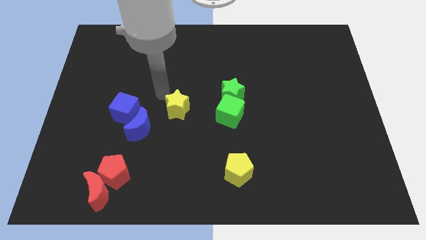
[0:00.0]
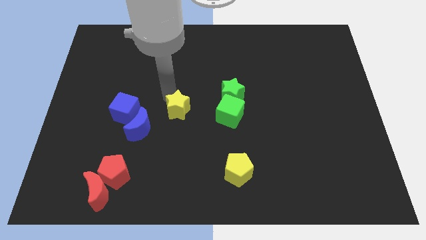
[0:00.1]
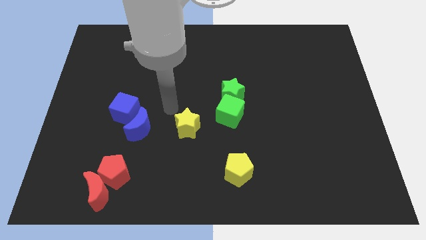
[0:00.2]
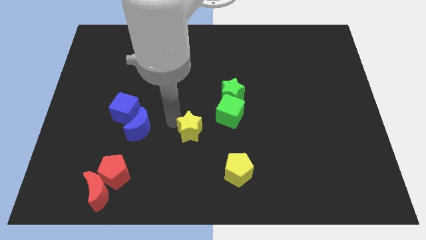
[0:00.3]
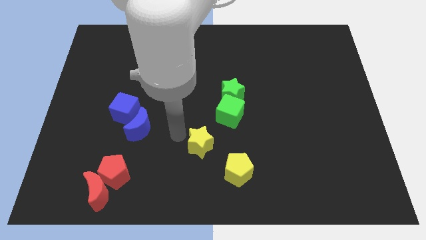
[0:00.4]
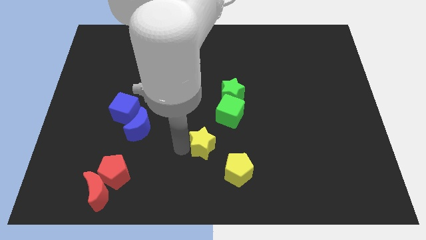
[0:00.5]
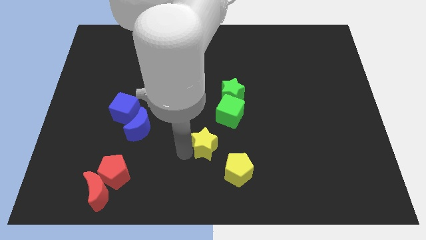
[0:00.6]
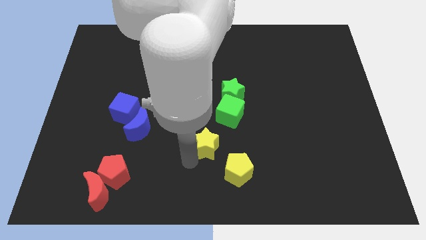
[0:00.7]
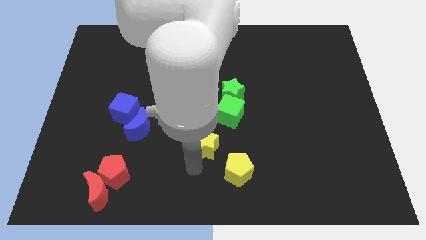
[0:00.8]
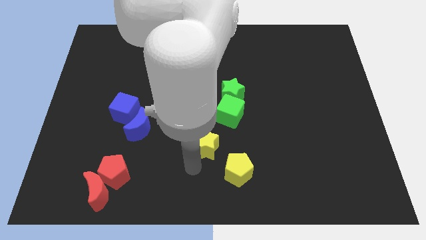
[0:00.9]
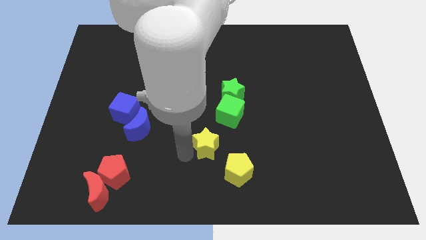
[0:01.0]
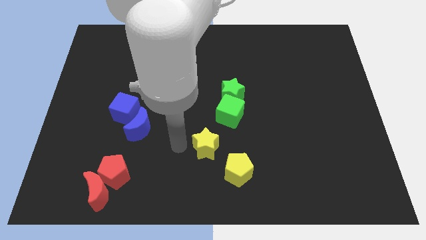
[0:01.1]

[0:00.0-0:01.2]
move the yellow star towards the yellow pentagon

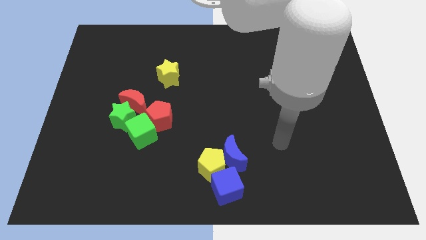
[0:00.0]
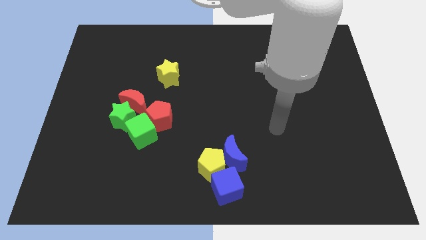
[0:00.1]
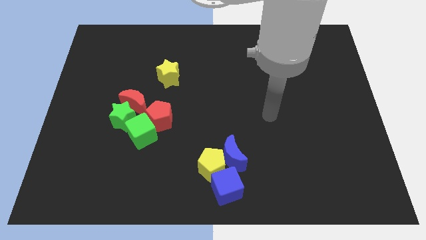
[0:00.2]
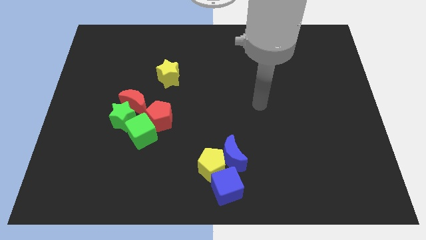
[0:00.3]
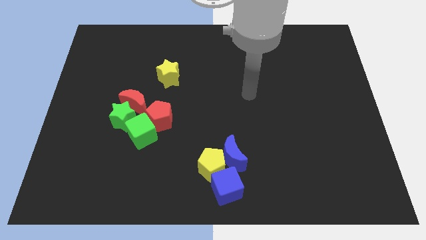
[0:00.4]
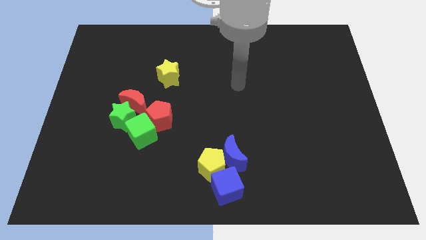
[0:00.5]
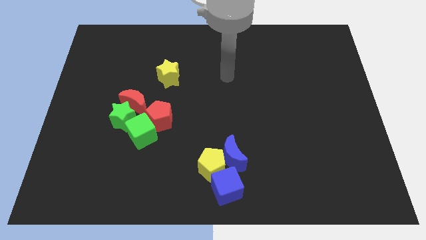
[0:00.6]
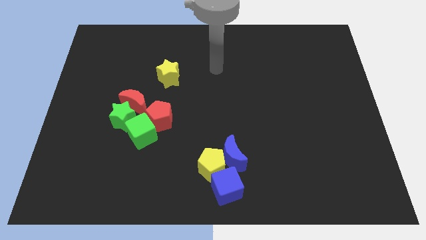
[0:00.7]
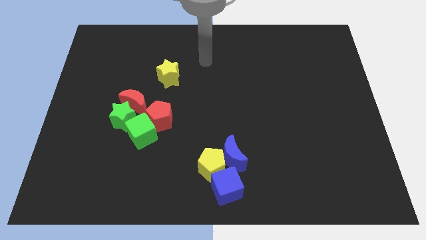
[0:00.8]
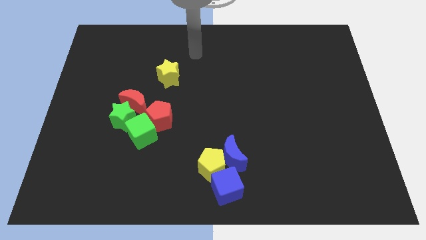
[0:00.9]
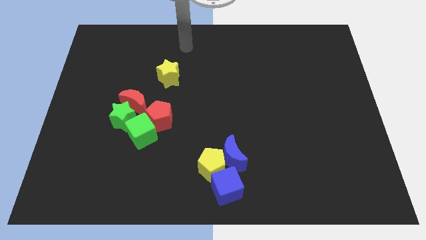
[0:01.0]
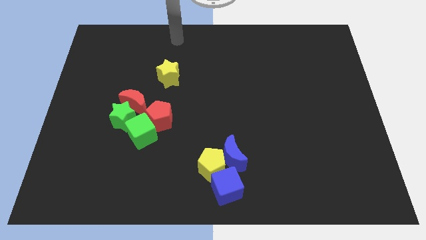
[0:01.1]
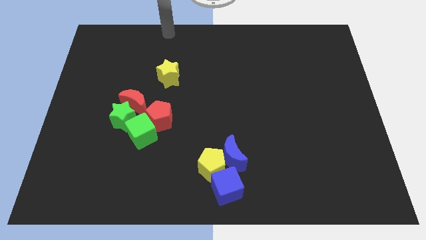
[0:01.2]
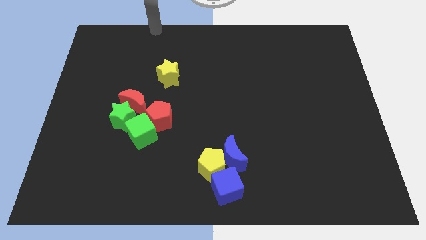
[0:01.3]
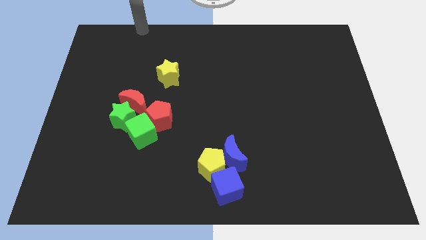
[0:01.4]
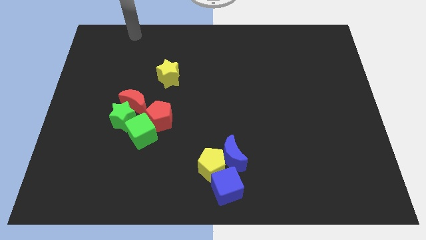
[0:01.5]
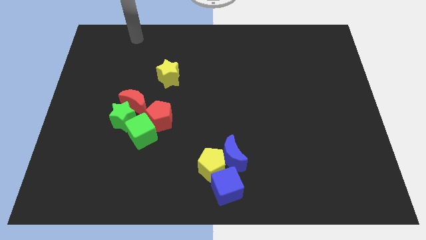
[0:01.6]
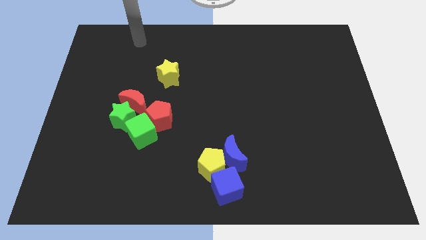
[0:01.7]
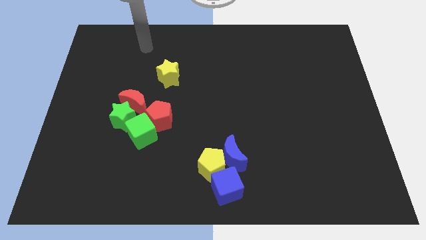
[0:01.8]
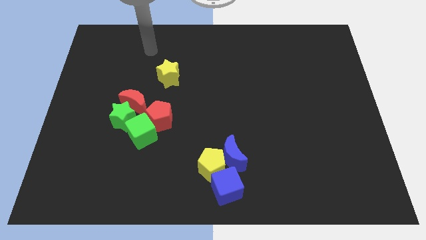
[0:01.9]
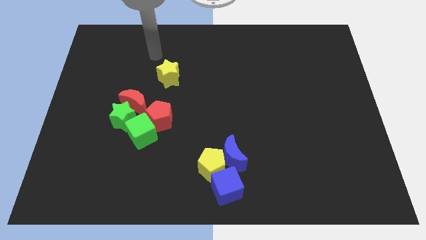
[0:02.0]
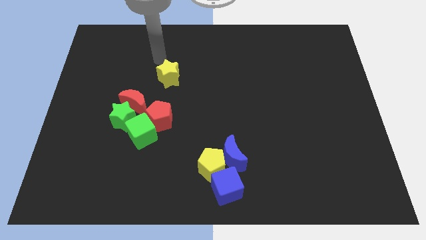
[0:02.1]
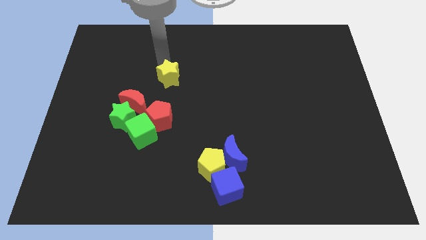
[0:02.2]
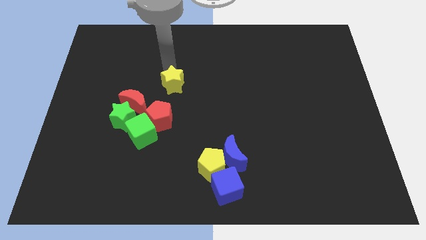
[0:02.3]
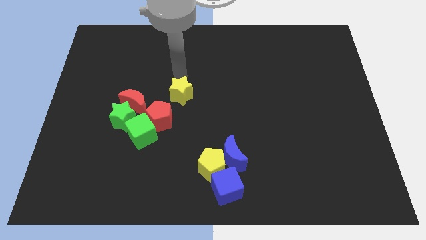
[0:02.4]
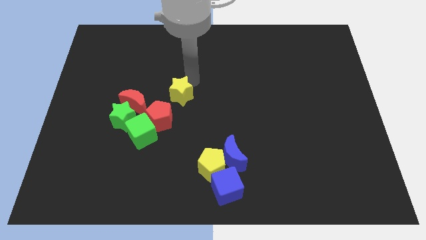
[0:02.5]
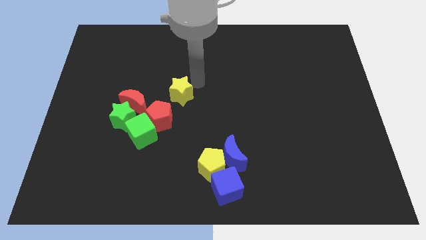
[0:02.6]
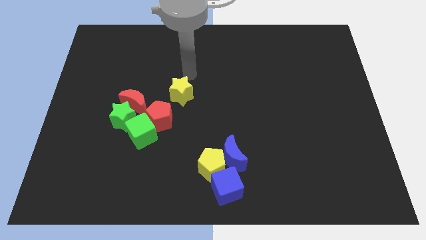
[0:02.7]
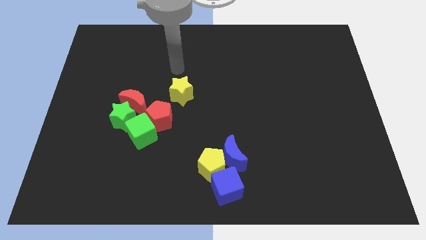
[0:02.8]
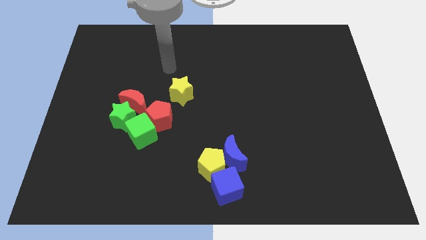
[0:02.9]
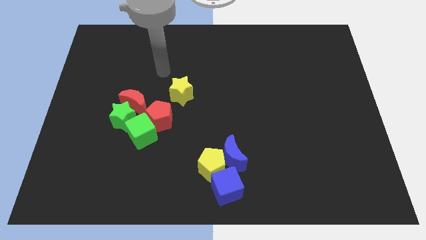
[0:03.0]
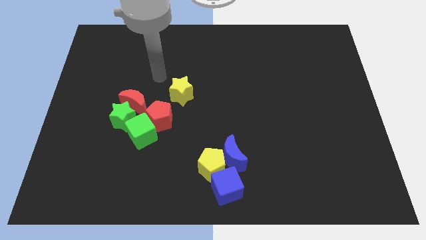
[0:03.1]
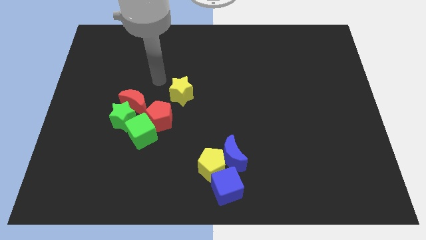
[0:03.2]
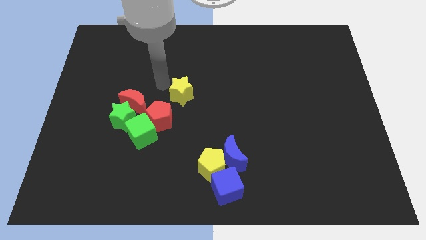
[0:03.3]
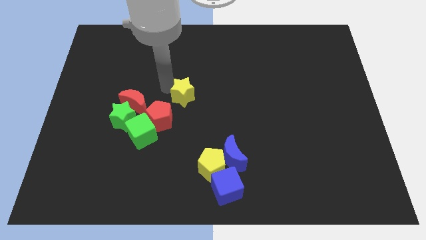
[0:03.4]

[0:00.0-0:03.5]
move the yellow star to the top right side of the red pentagon

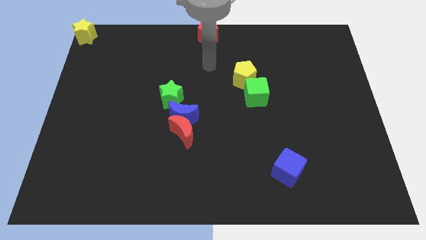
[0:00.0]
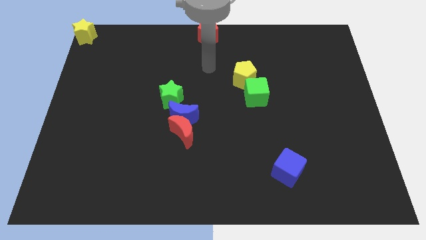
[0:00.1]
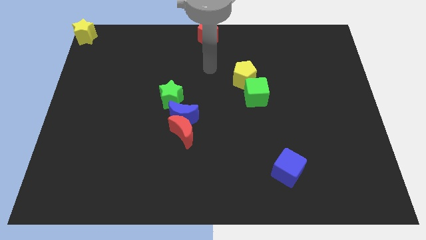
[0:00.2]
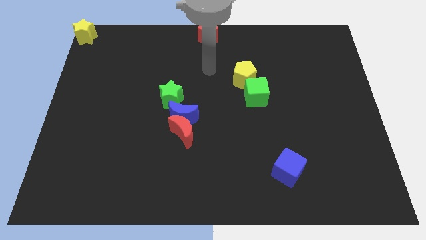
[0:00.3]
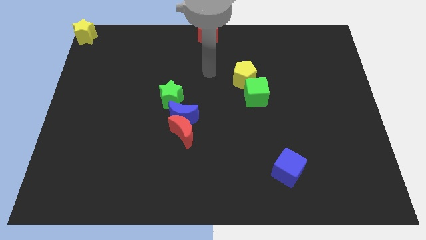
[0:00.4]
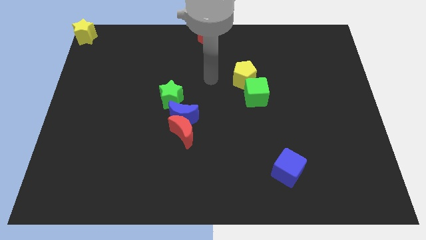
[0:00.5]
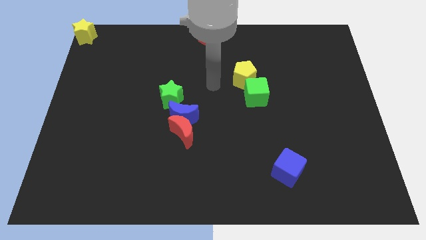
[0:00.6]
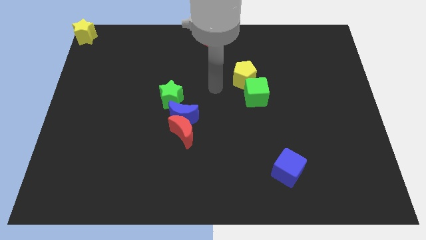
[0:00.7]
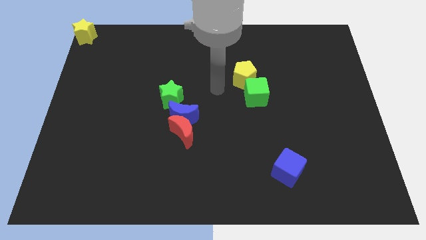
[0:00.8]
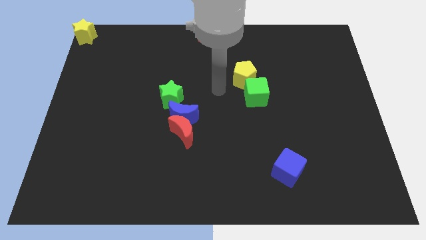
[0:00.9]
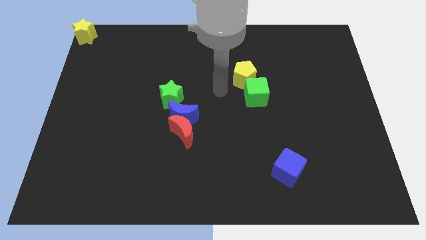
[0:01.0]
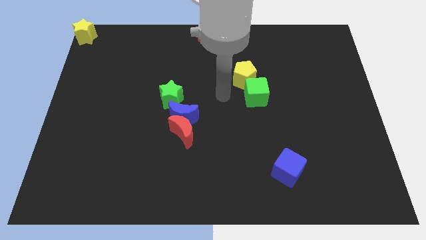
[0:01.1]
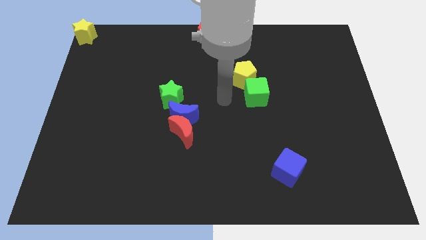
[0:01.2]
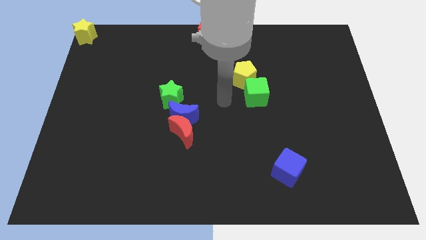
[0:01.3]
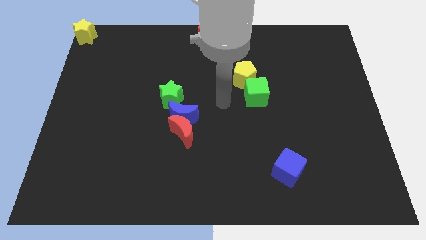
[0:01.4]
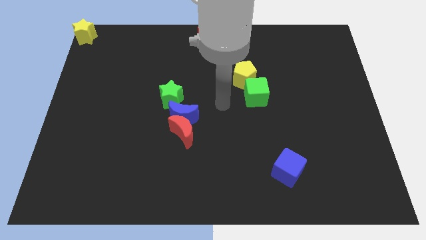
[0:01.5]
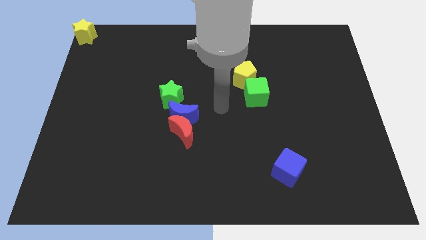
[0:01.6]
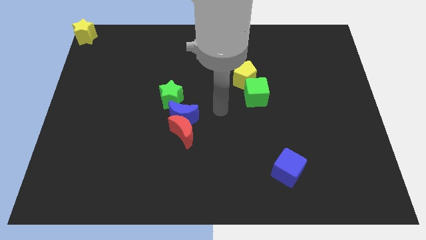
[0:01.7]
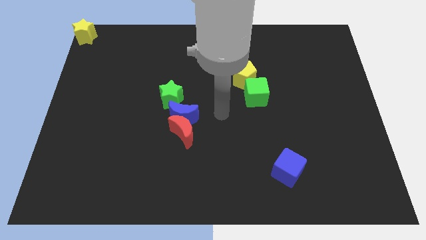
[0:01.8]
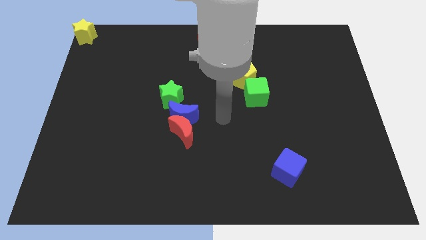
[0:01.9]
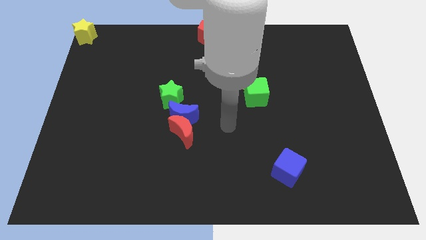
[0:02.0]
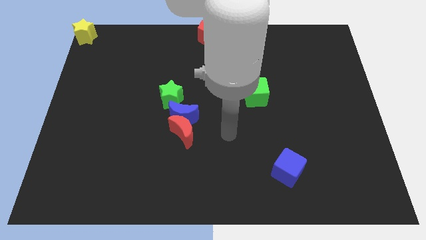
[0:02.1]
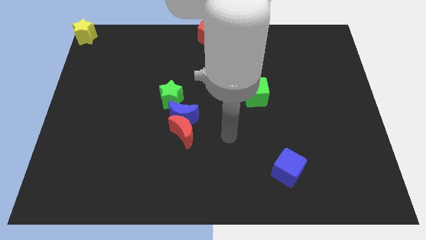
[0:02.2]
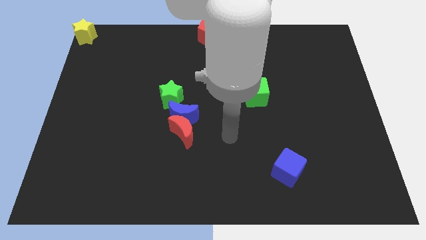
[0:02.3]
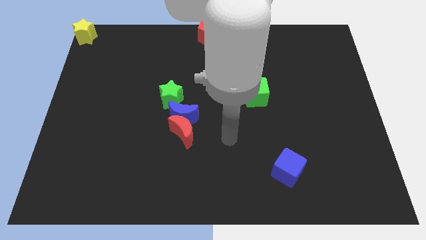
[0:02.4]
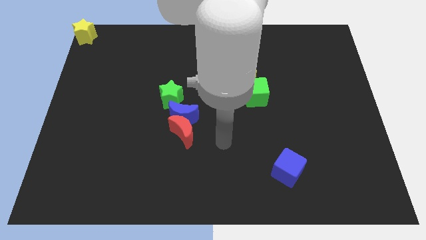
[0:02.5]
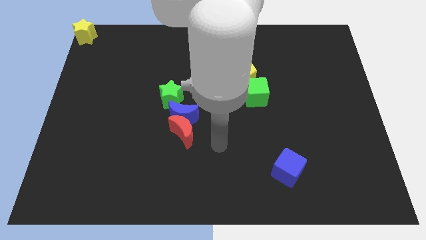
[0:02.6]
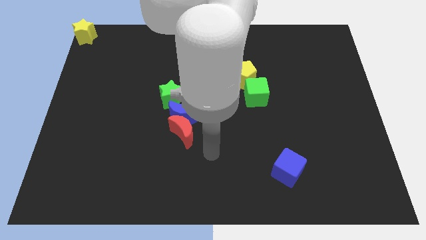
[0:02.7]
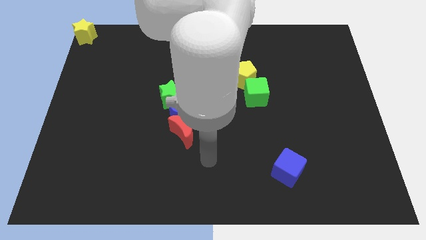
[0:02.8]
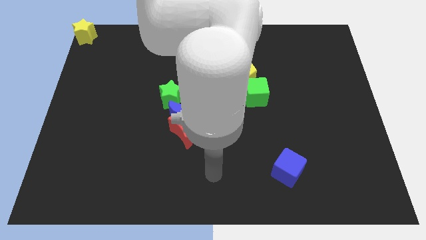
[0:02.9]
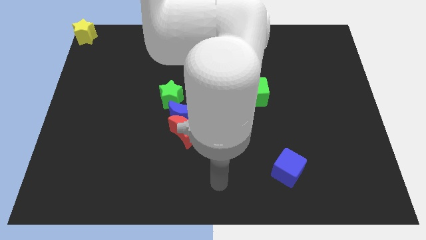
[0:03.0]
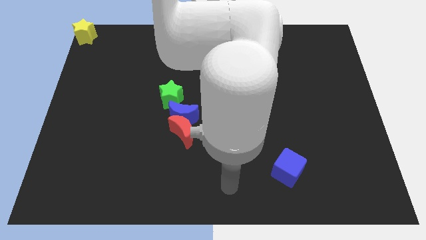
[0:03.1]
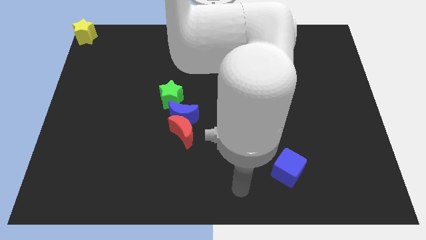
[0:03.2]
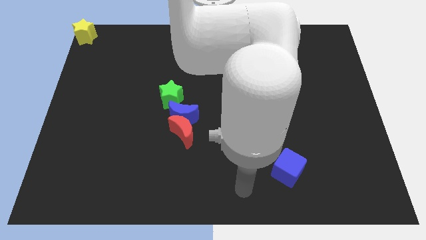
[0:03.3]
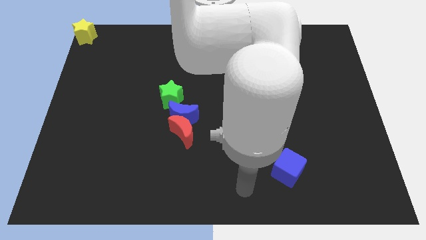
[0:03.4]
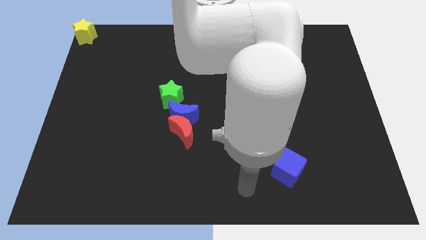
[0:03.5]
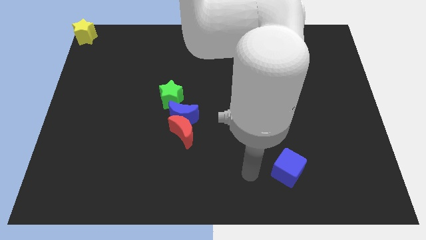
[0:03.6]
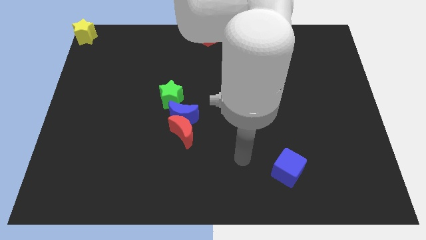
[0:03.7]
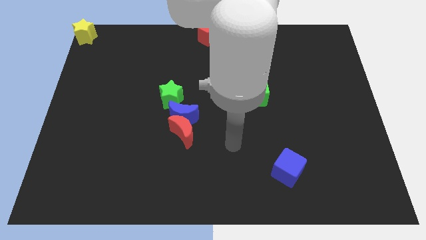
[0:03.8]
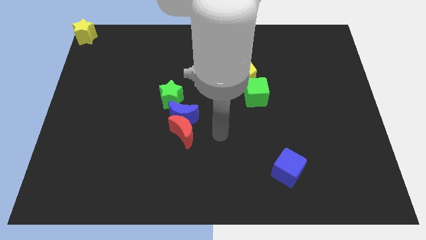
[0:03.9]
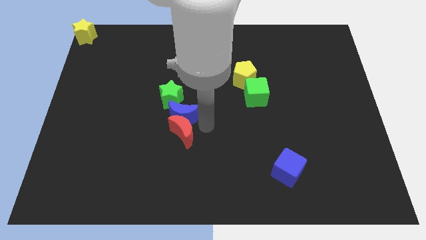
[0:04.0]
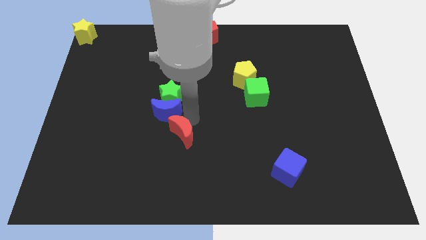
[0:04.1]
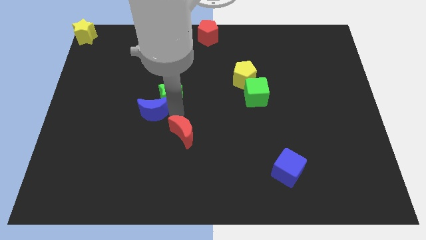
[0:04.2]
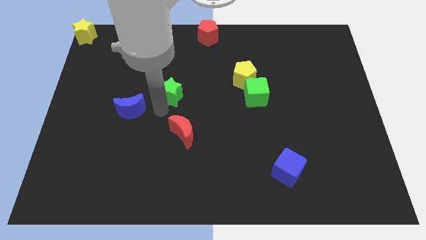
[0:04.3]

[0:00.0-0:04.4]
separate blue moon from the green star
